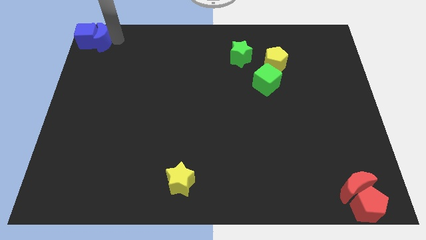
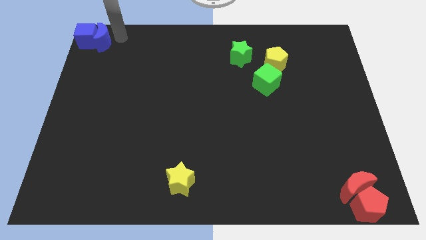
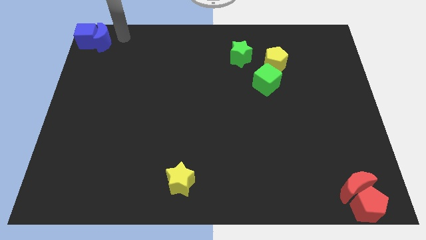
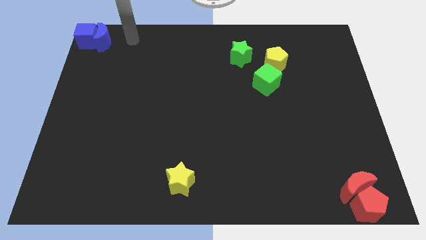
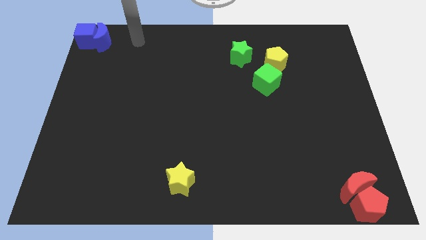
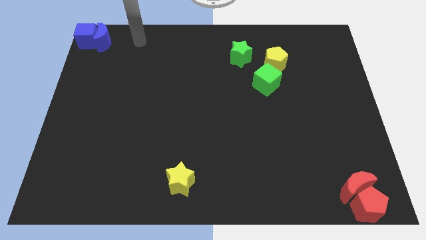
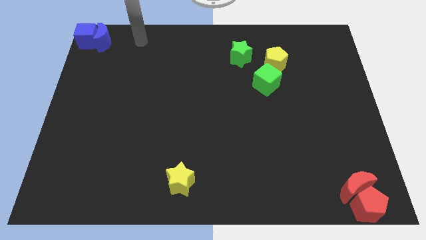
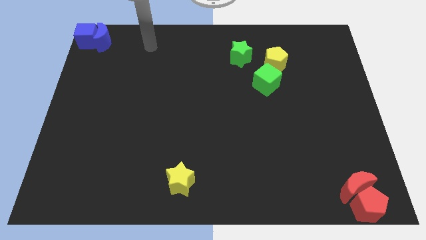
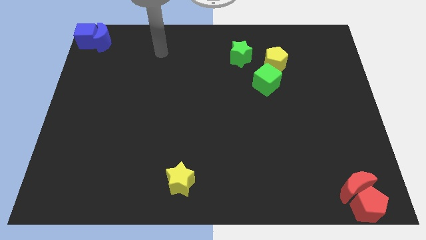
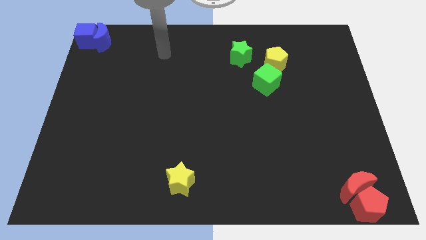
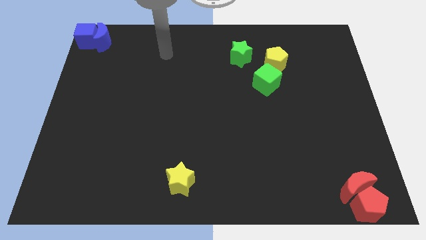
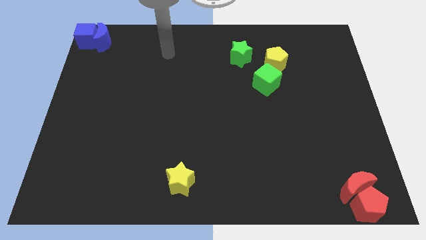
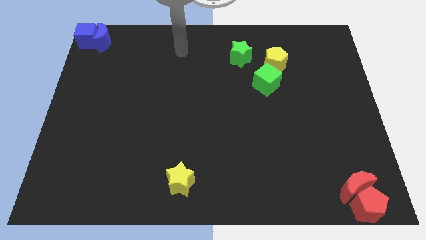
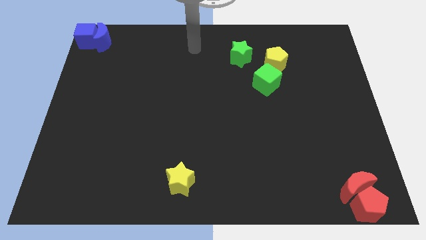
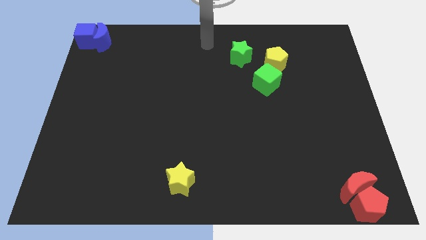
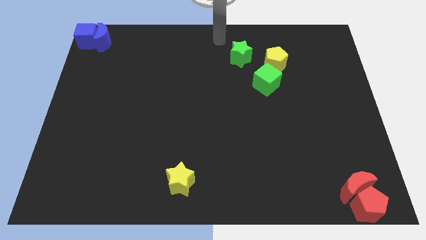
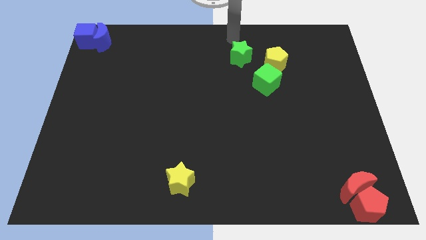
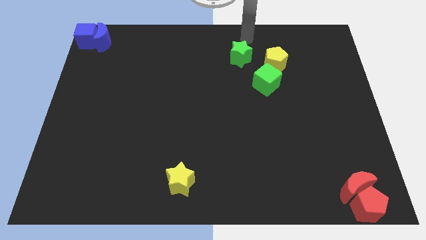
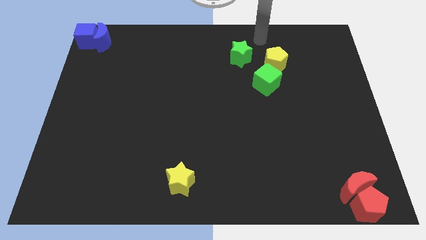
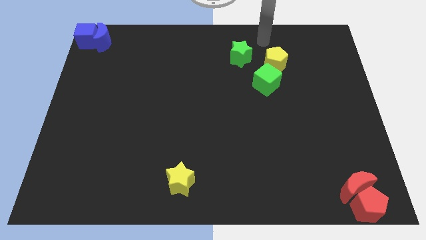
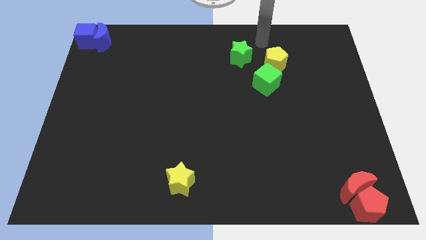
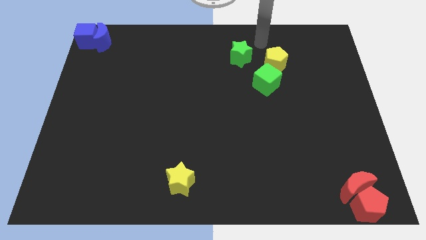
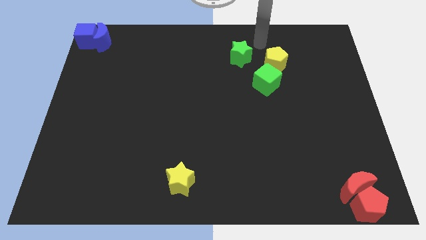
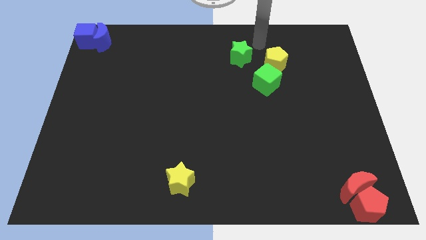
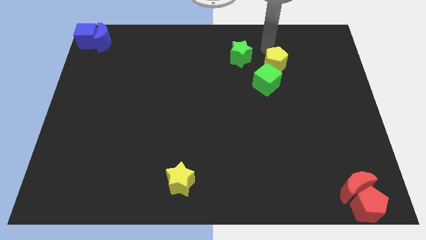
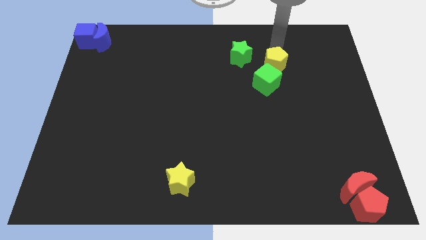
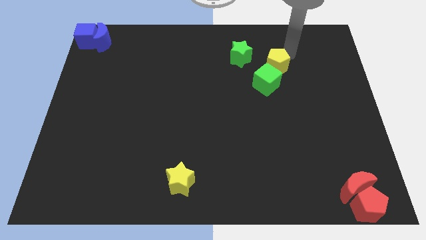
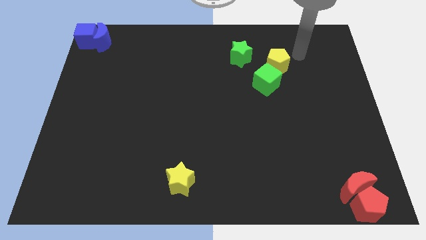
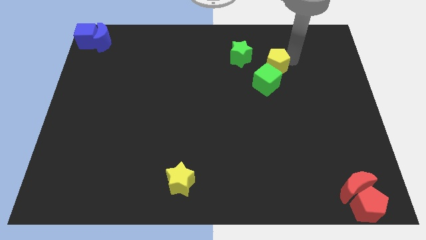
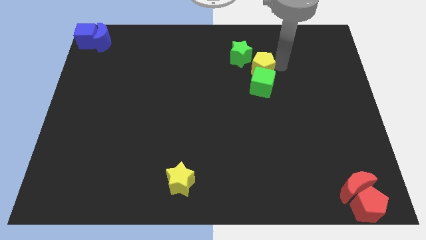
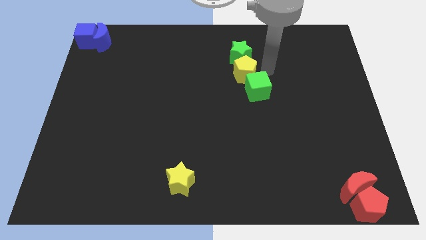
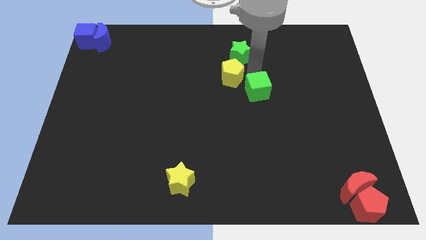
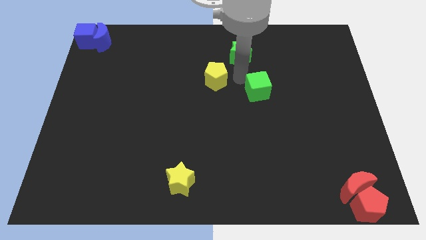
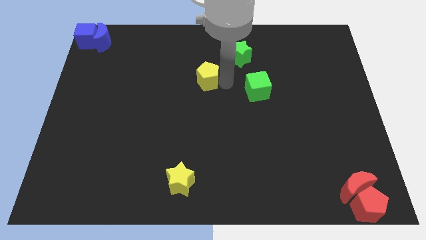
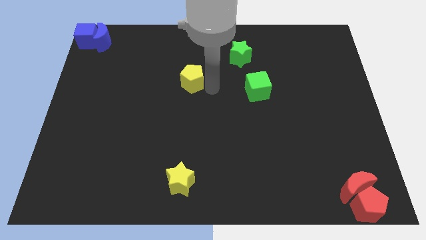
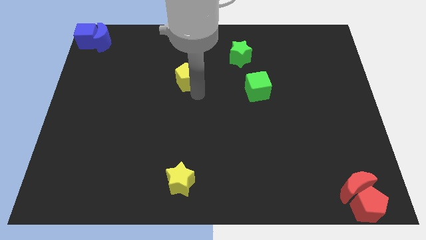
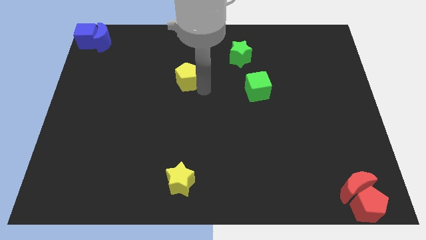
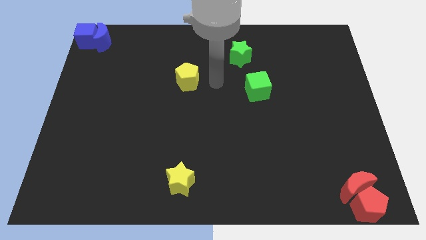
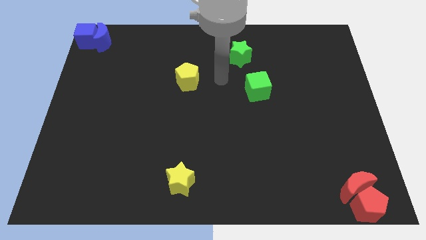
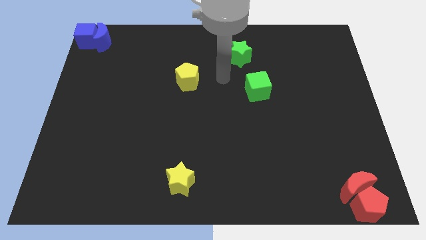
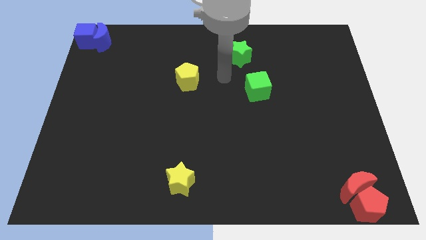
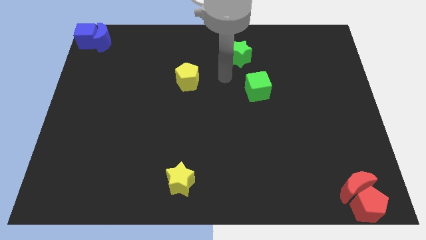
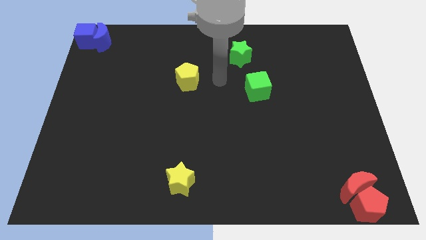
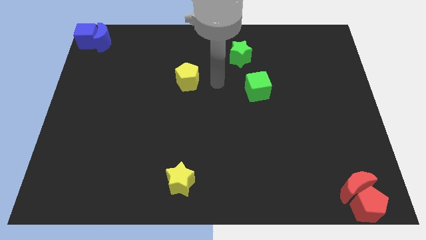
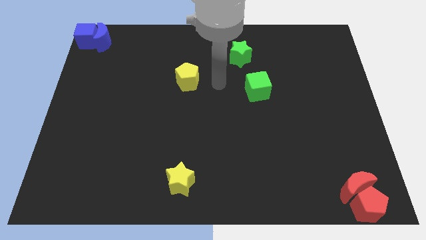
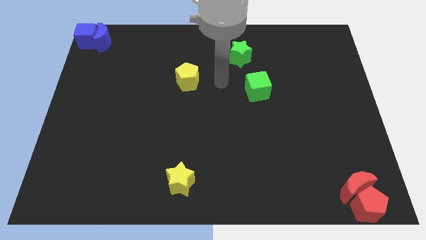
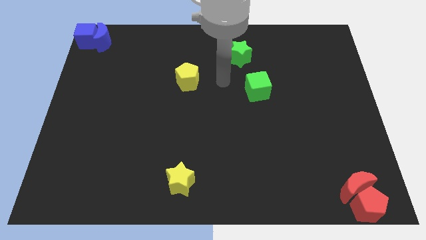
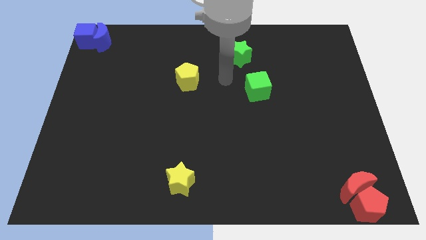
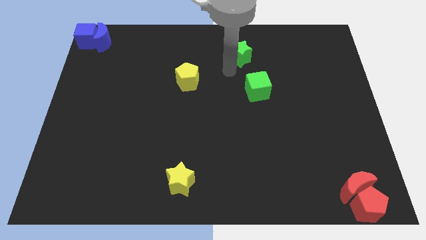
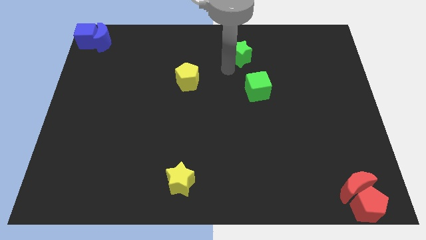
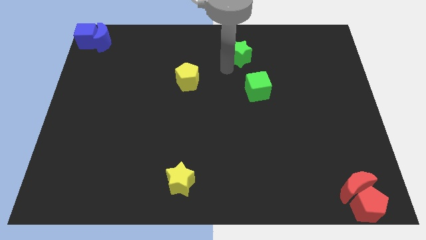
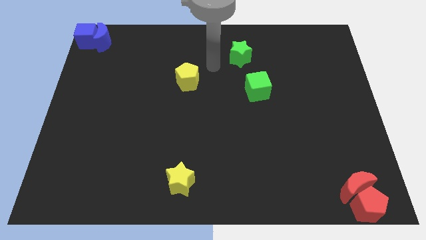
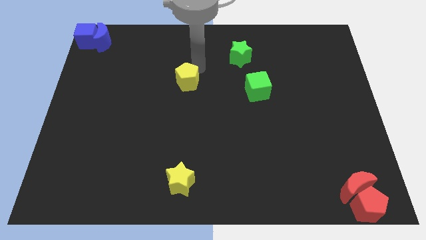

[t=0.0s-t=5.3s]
put the yellow pentagon diagonally bottom left to the green star

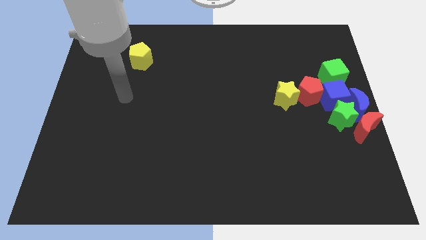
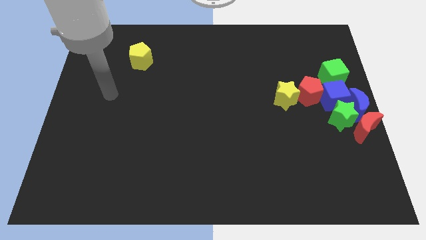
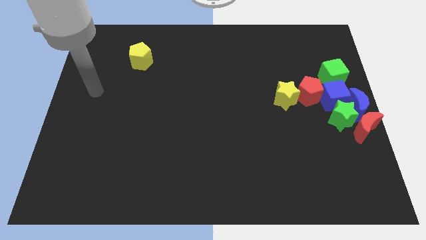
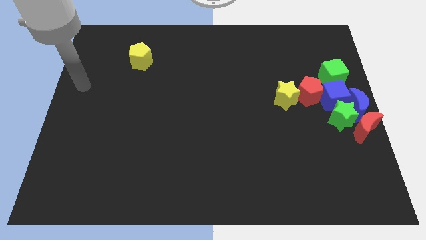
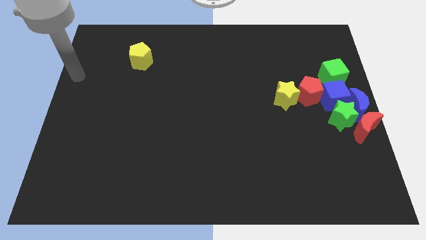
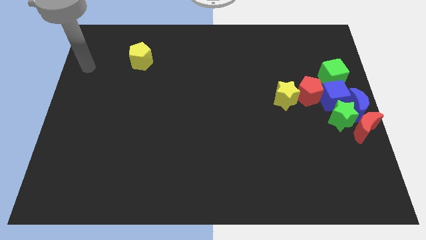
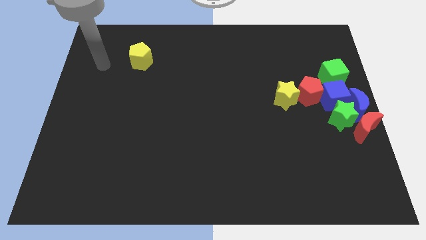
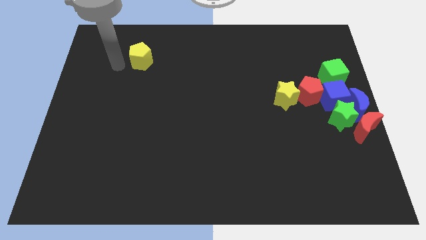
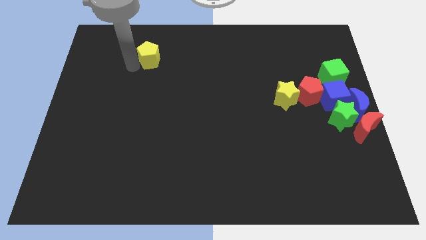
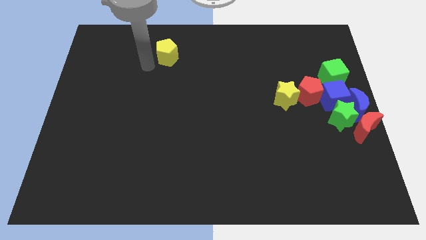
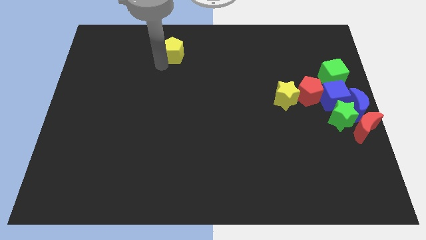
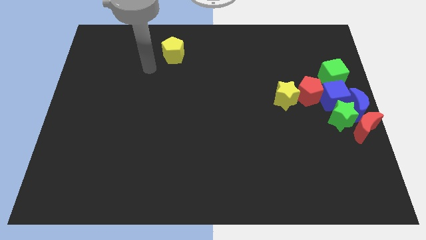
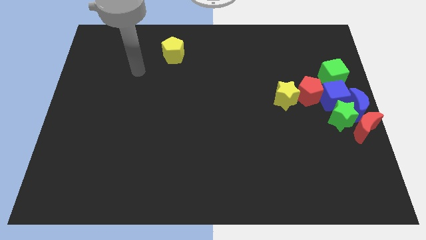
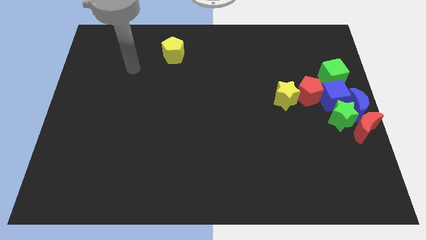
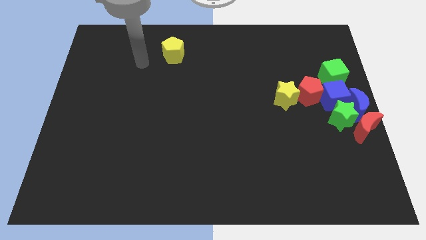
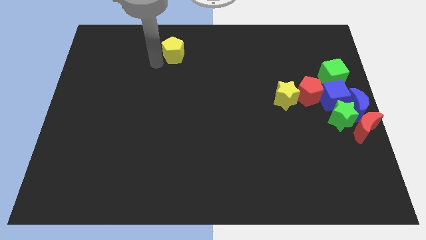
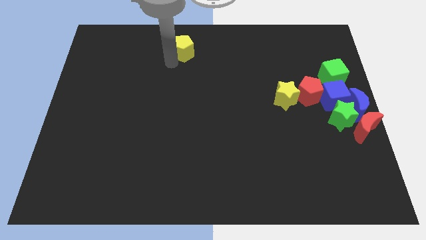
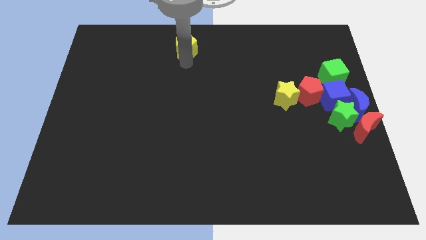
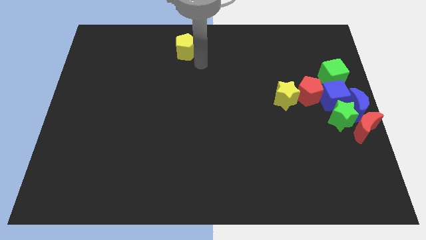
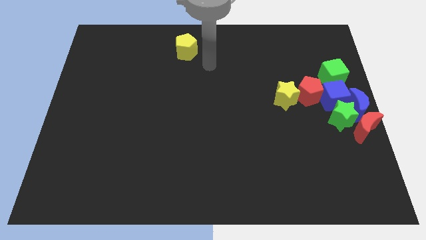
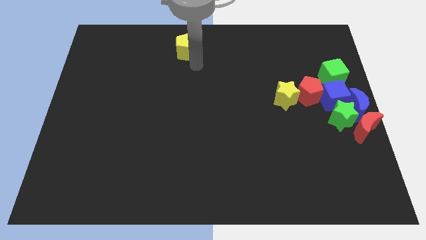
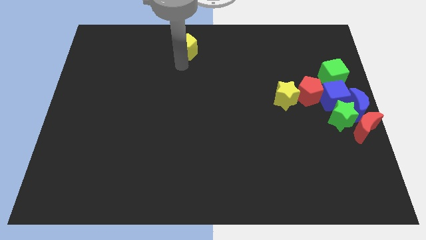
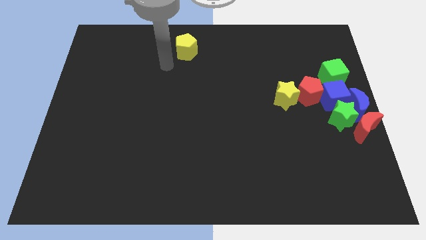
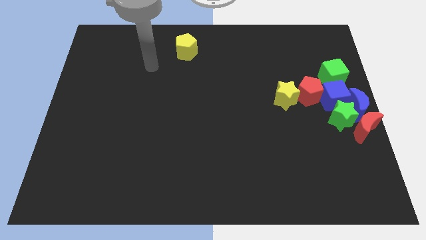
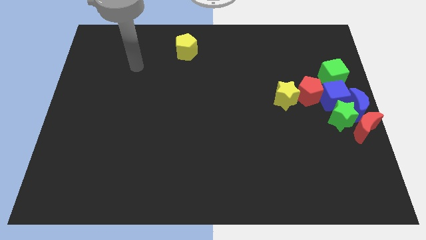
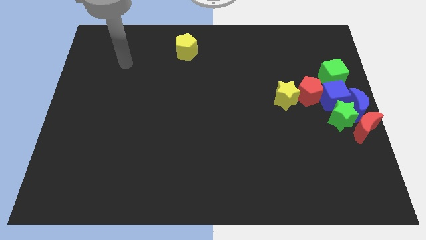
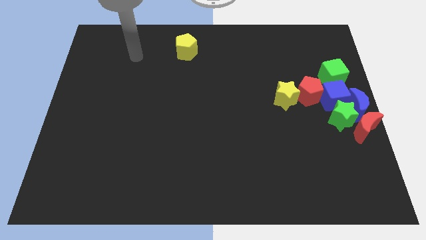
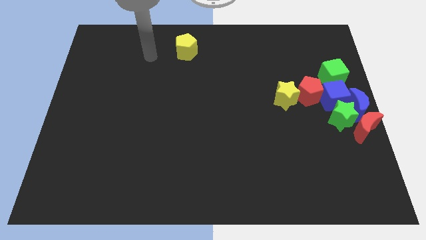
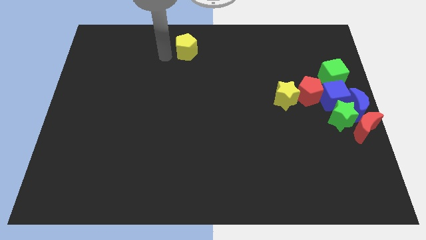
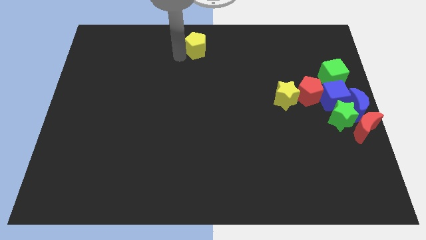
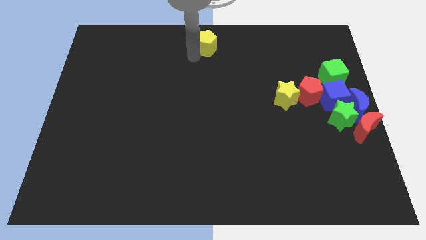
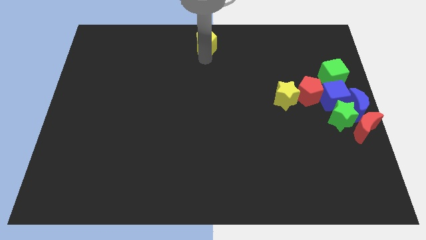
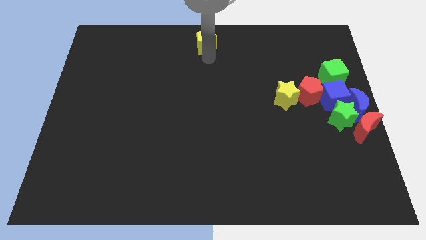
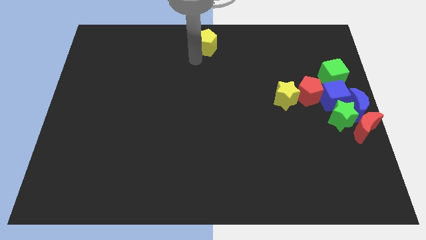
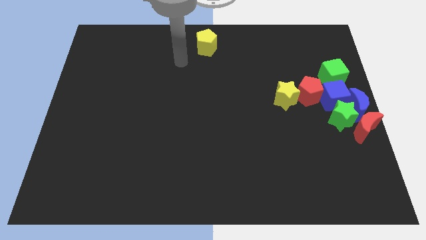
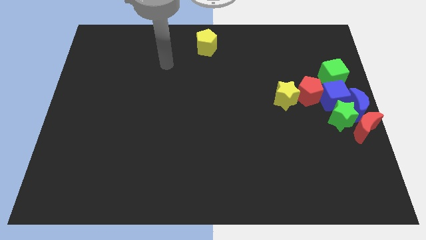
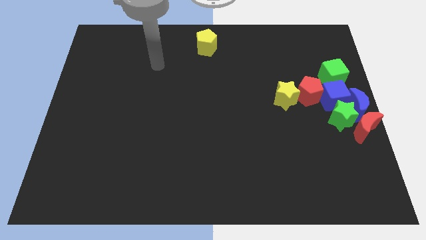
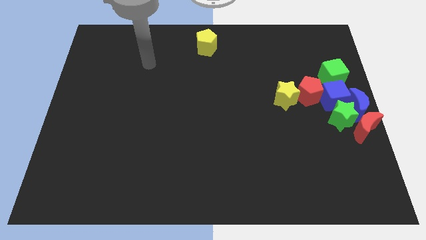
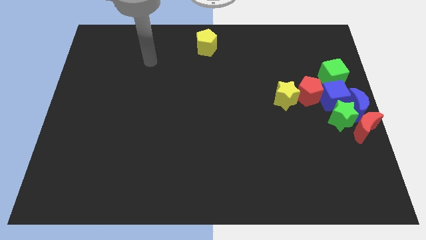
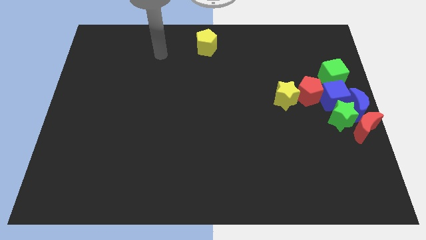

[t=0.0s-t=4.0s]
place yellow pentagon to the top center of the board
